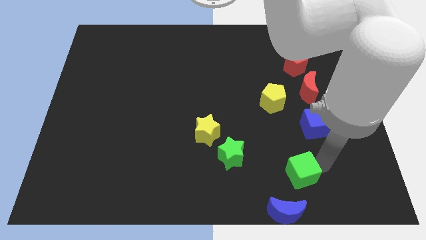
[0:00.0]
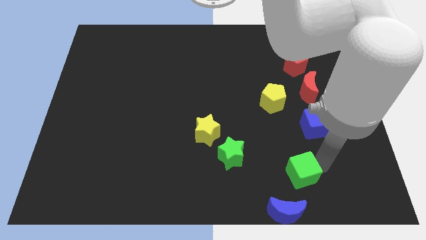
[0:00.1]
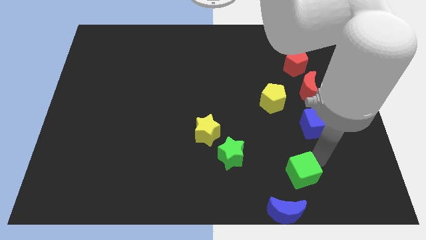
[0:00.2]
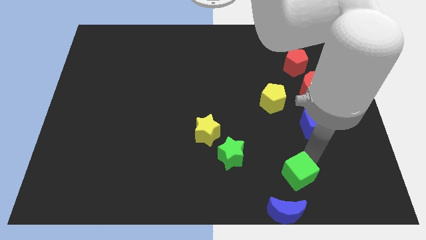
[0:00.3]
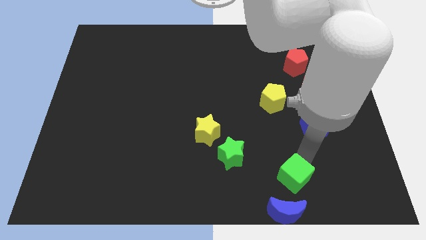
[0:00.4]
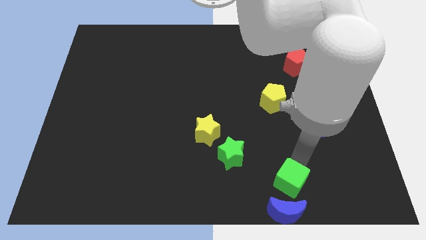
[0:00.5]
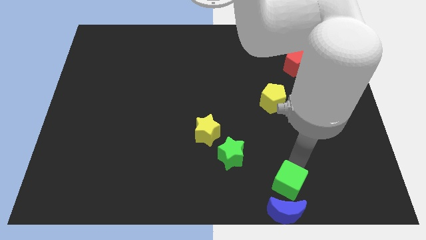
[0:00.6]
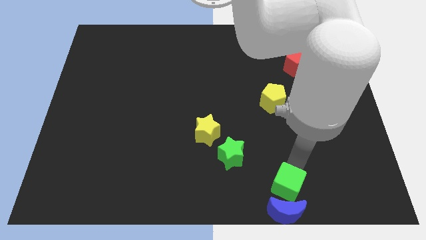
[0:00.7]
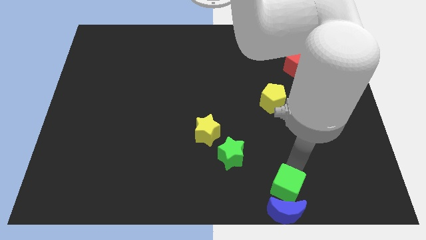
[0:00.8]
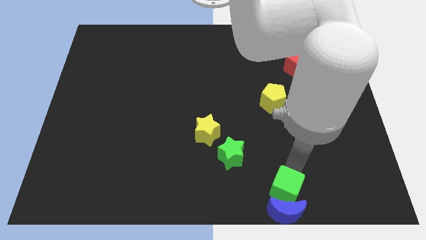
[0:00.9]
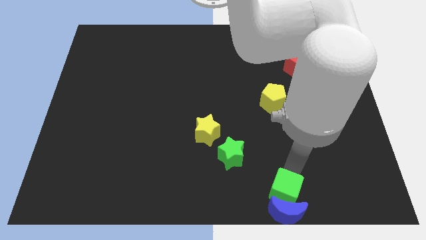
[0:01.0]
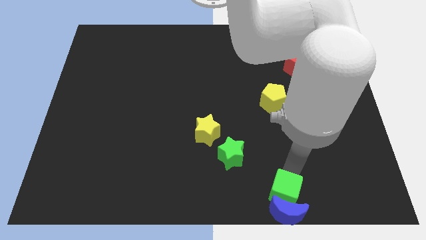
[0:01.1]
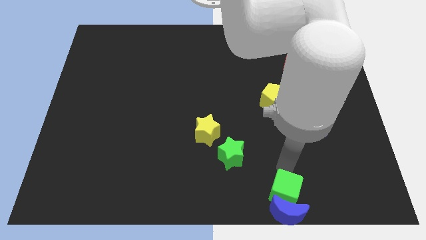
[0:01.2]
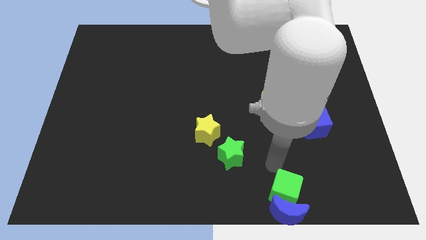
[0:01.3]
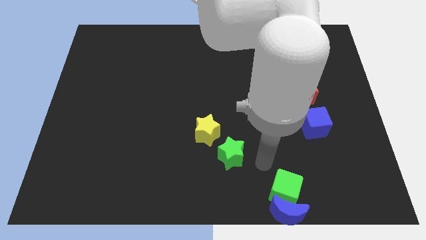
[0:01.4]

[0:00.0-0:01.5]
put the green cube at the top of the blue moon

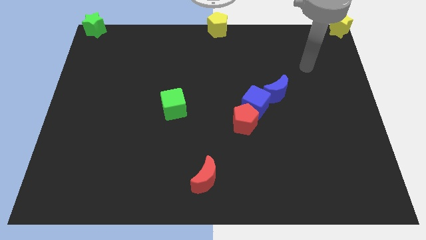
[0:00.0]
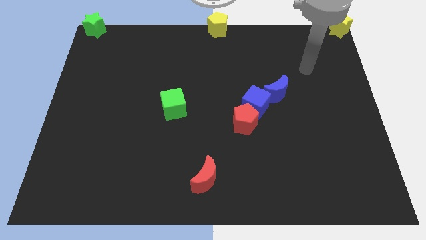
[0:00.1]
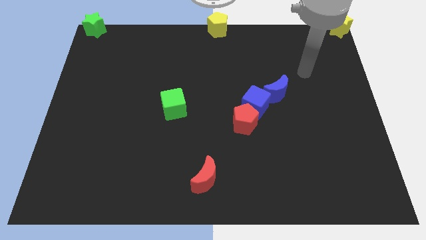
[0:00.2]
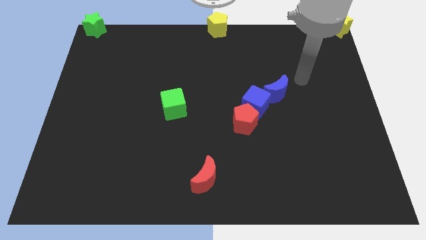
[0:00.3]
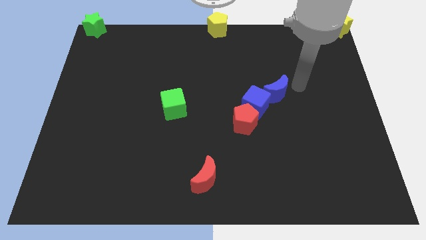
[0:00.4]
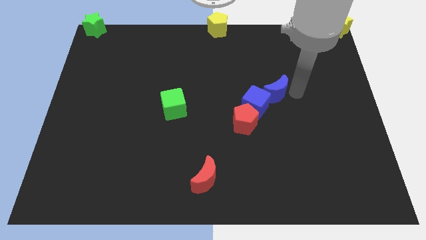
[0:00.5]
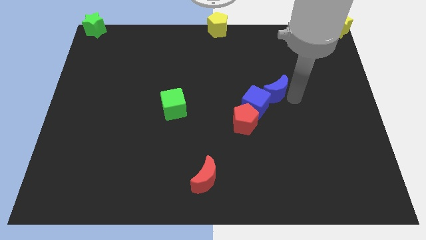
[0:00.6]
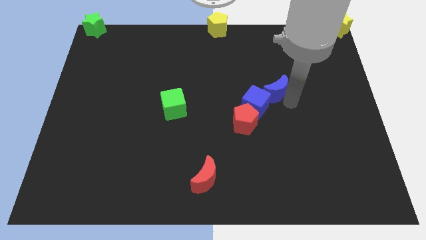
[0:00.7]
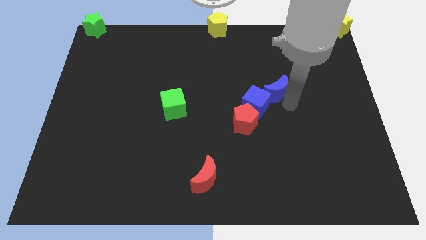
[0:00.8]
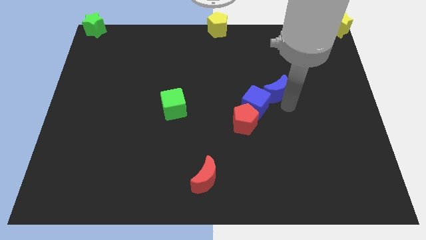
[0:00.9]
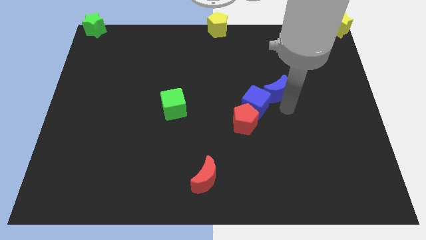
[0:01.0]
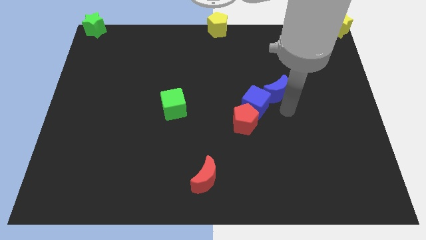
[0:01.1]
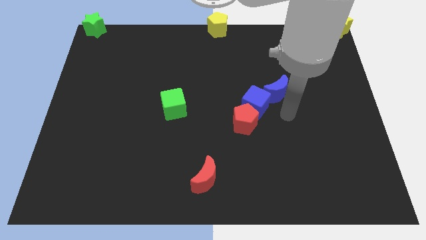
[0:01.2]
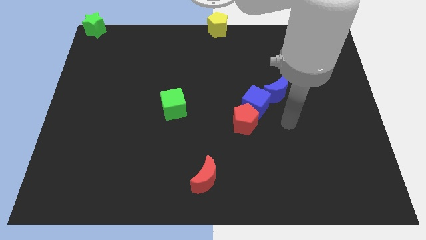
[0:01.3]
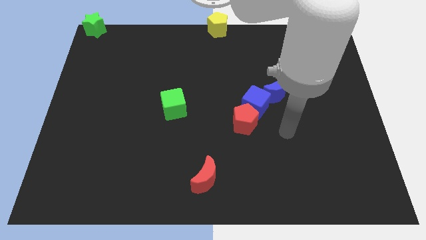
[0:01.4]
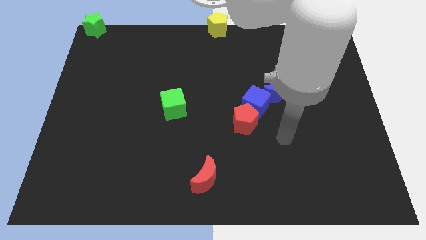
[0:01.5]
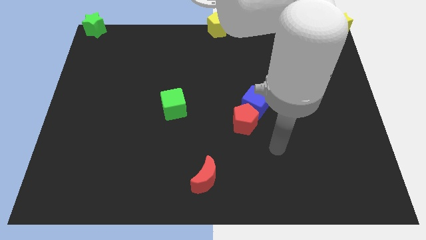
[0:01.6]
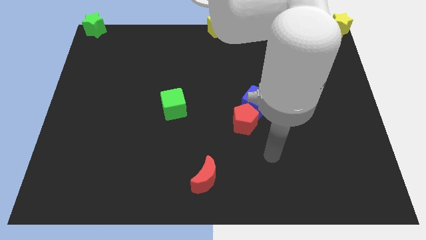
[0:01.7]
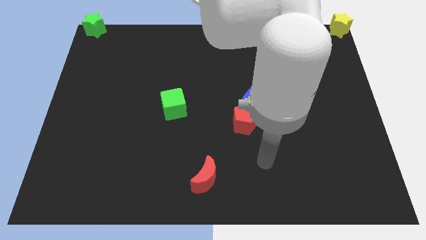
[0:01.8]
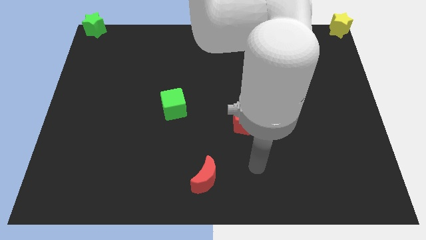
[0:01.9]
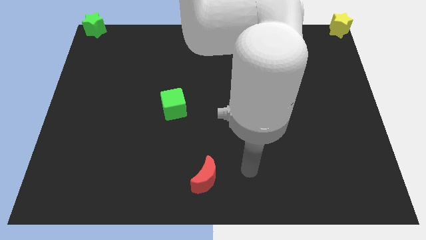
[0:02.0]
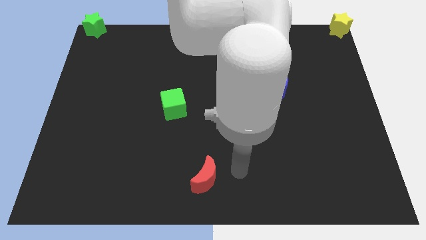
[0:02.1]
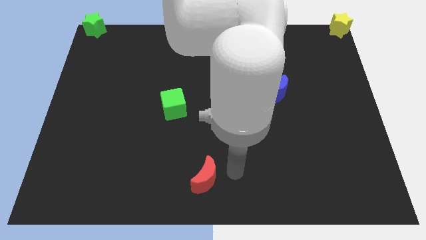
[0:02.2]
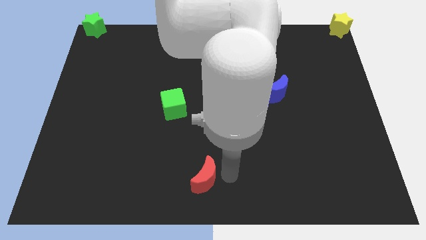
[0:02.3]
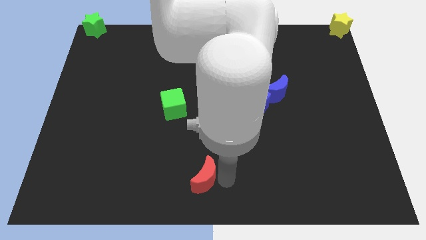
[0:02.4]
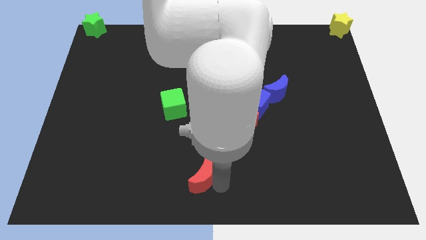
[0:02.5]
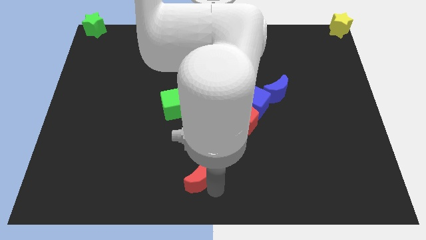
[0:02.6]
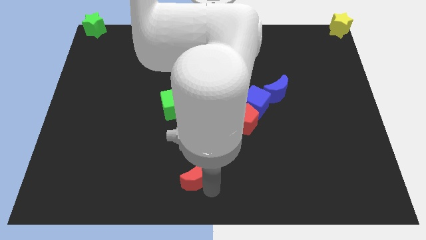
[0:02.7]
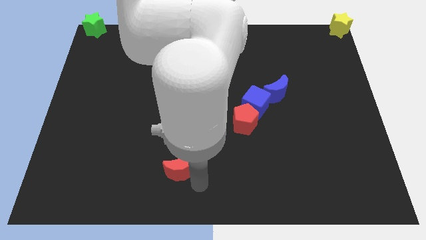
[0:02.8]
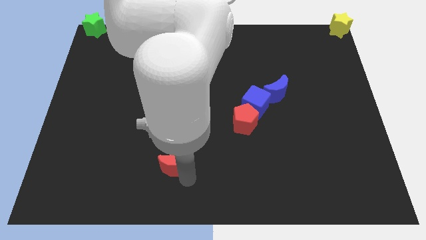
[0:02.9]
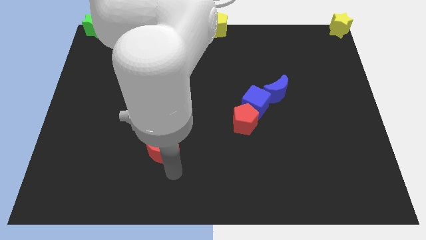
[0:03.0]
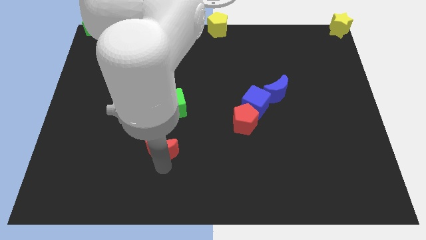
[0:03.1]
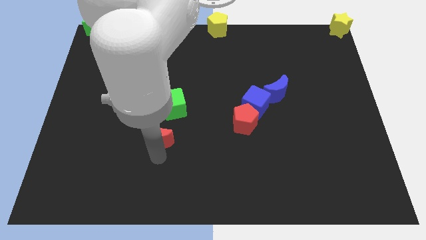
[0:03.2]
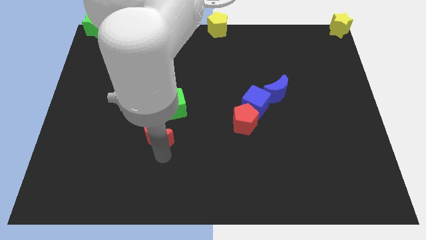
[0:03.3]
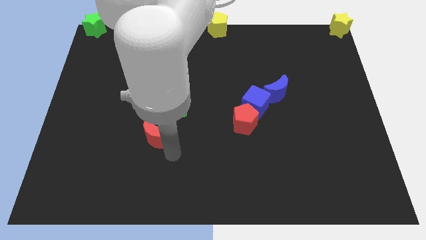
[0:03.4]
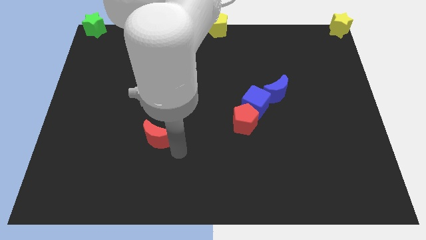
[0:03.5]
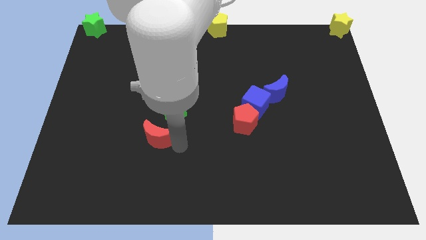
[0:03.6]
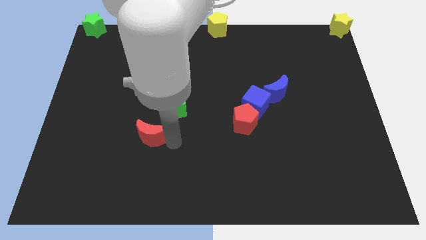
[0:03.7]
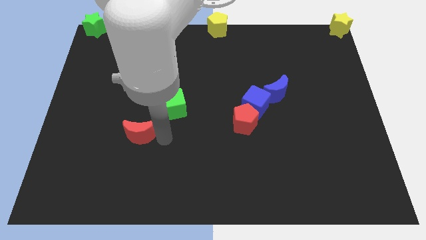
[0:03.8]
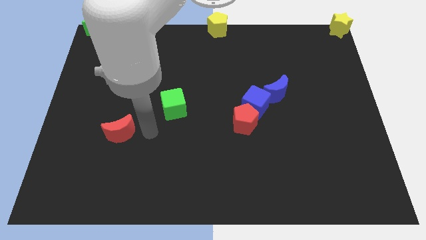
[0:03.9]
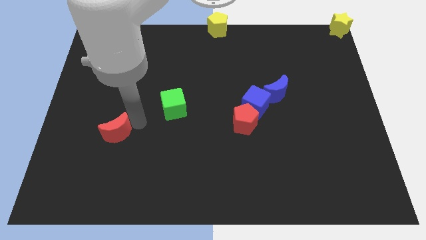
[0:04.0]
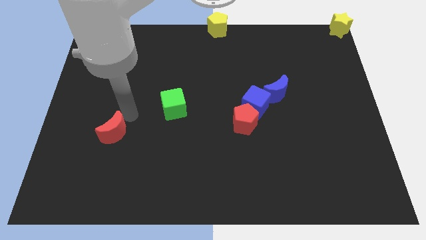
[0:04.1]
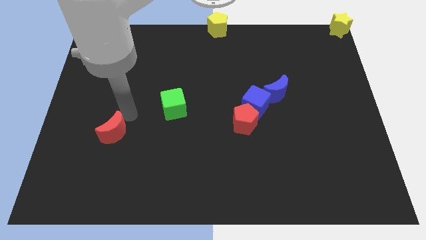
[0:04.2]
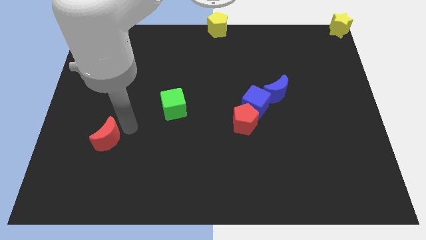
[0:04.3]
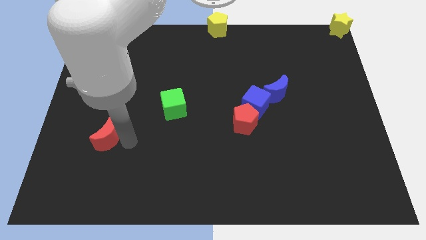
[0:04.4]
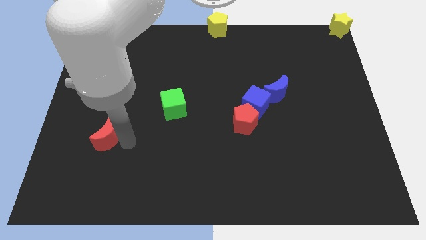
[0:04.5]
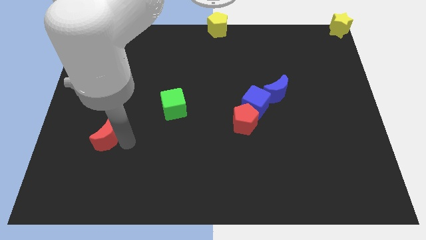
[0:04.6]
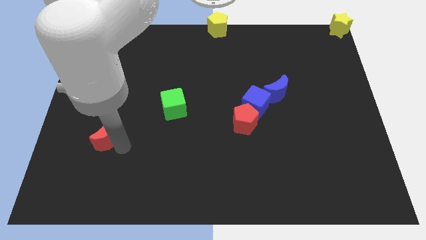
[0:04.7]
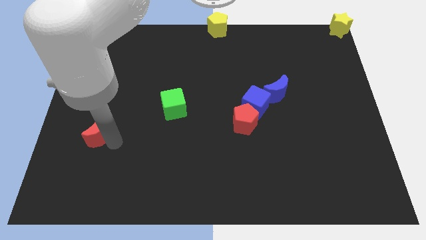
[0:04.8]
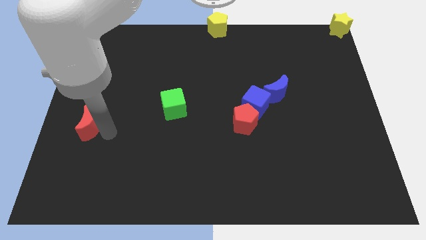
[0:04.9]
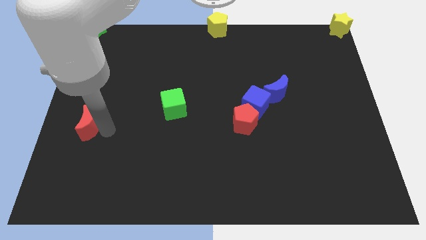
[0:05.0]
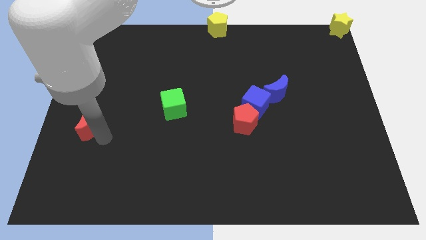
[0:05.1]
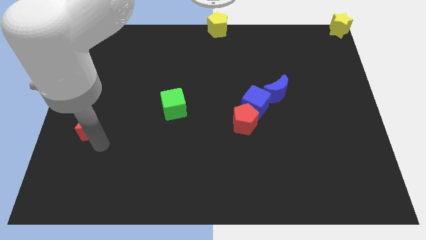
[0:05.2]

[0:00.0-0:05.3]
move the red moon to the center left of the board

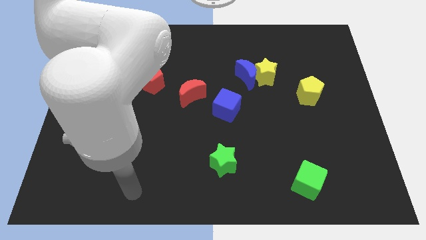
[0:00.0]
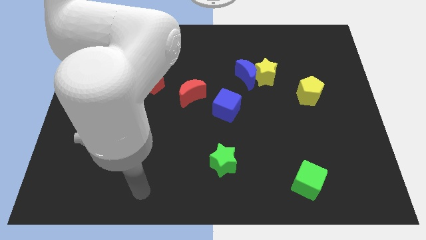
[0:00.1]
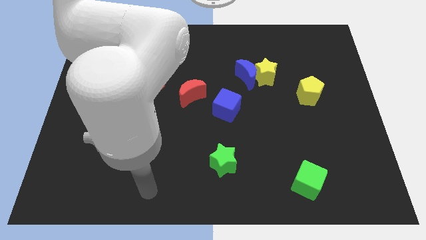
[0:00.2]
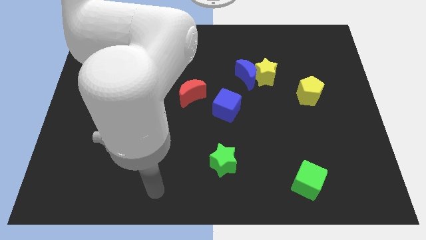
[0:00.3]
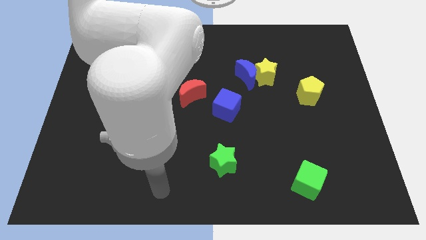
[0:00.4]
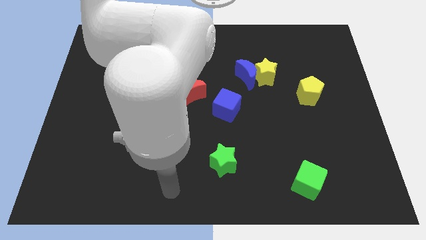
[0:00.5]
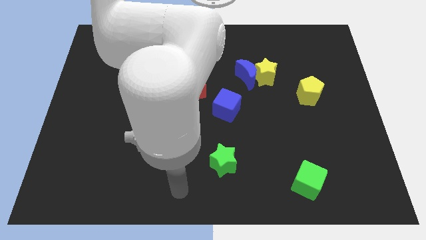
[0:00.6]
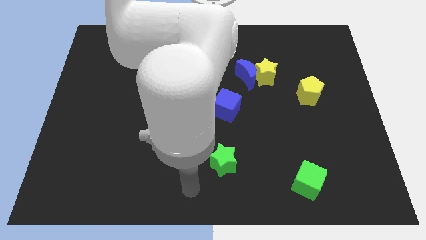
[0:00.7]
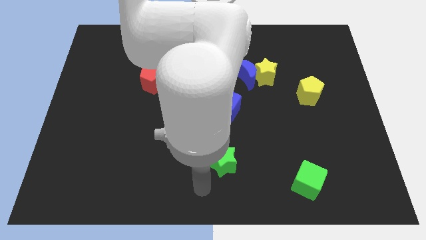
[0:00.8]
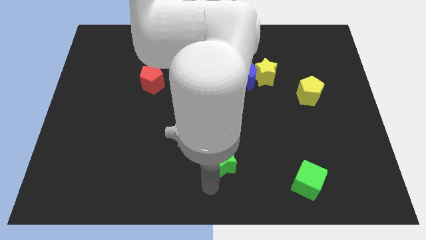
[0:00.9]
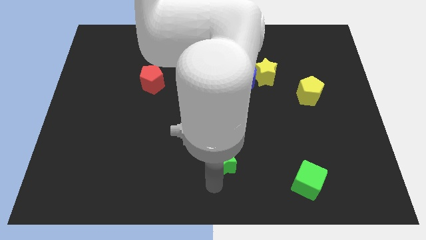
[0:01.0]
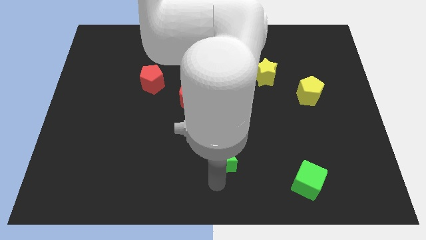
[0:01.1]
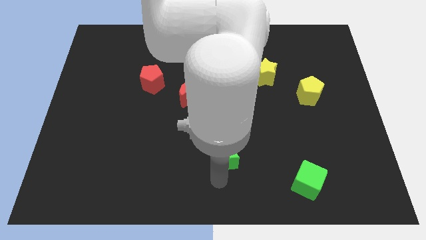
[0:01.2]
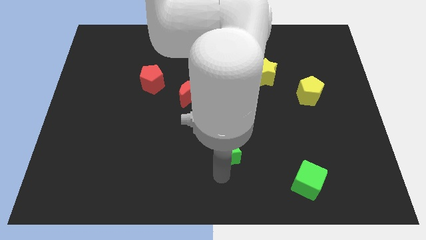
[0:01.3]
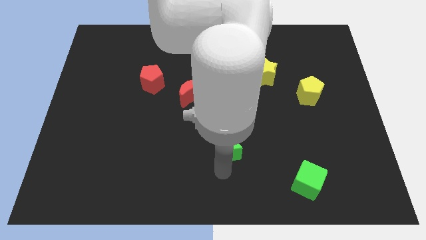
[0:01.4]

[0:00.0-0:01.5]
push the green star towards the center of the board

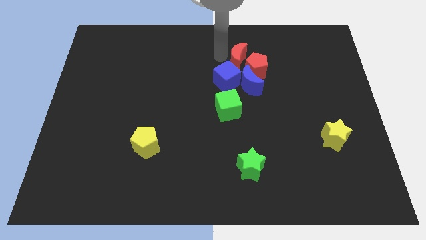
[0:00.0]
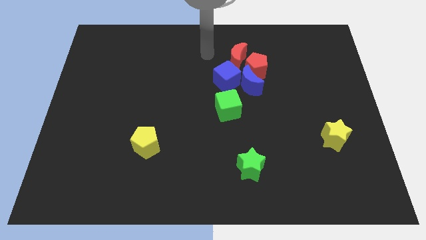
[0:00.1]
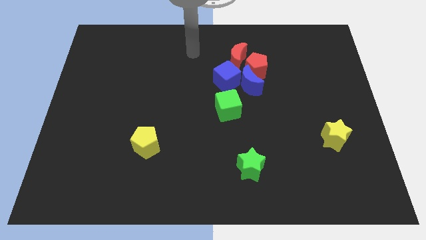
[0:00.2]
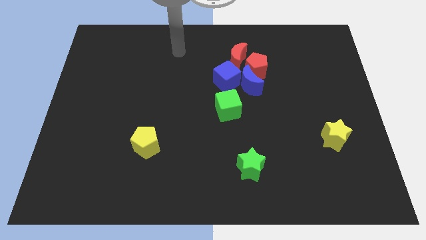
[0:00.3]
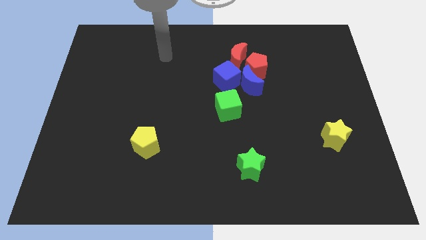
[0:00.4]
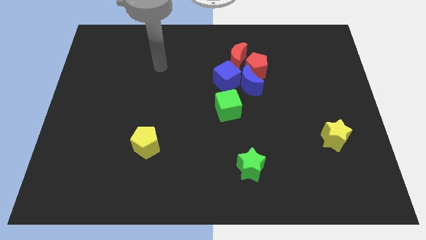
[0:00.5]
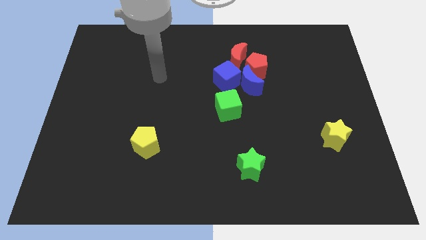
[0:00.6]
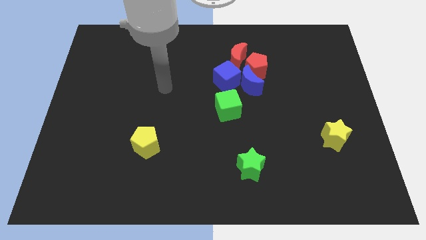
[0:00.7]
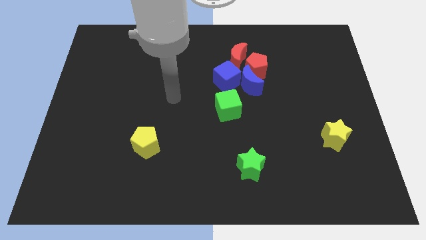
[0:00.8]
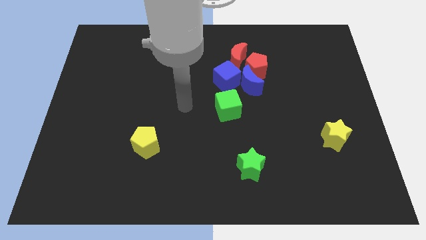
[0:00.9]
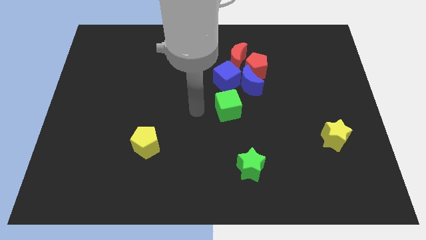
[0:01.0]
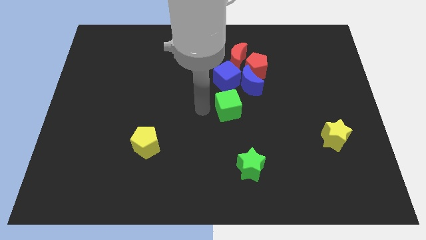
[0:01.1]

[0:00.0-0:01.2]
point your hand at the left side of the green cube
